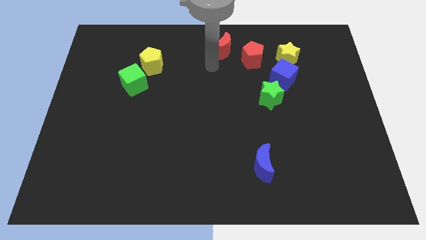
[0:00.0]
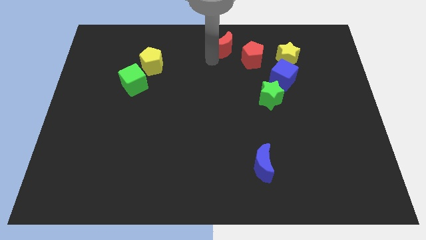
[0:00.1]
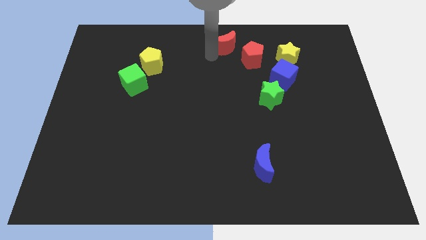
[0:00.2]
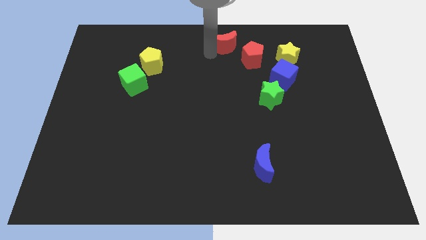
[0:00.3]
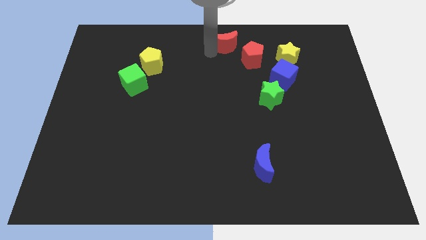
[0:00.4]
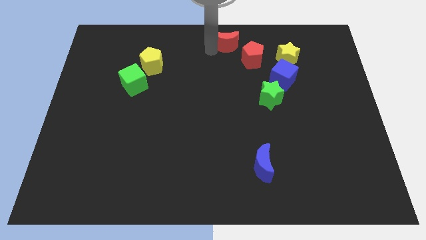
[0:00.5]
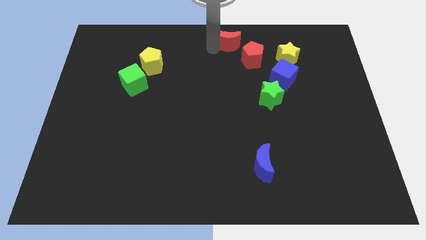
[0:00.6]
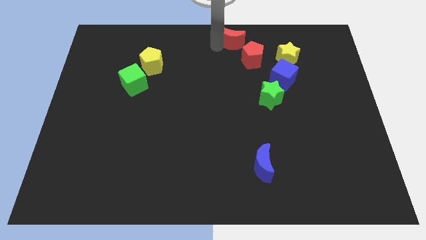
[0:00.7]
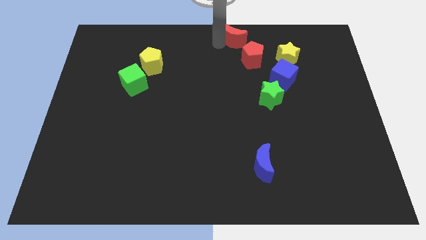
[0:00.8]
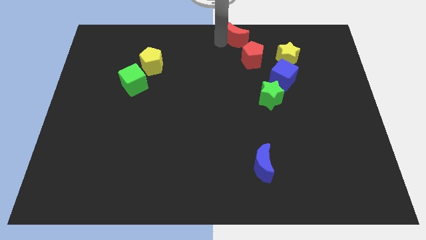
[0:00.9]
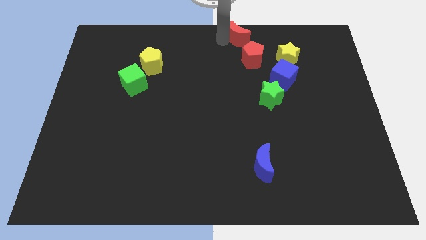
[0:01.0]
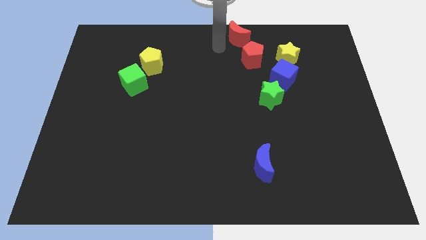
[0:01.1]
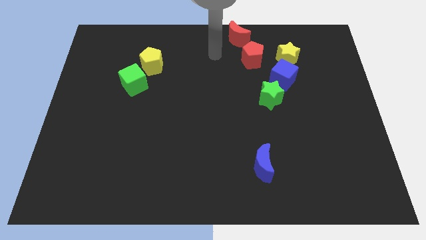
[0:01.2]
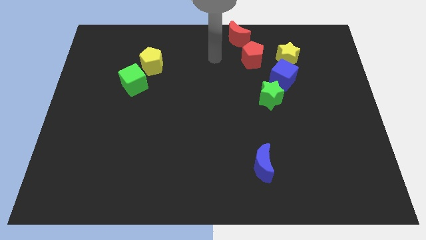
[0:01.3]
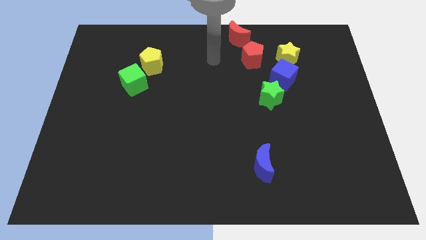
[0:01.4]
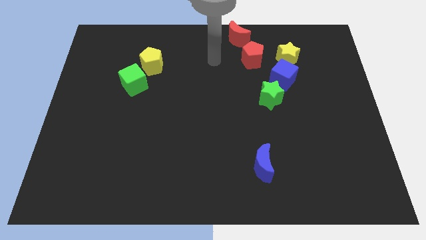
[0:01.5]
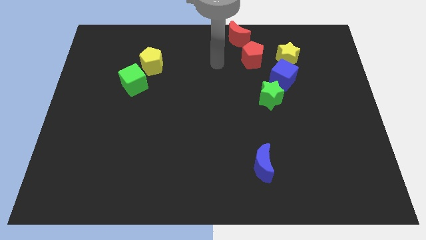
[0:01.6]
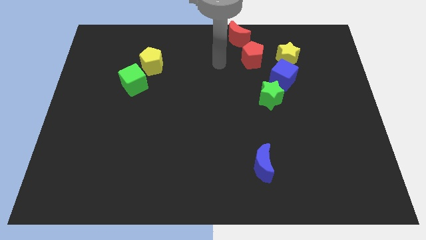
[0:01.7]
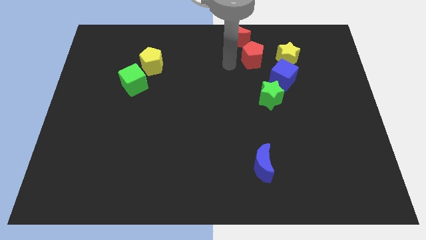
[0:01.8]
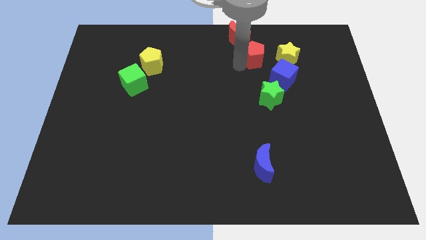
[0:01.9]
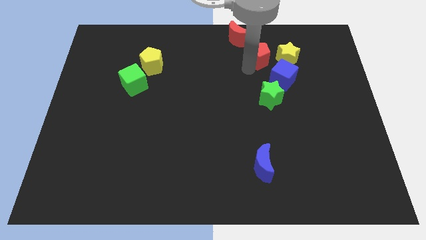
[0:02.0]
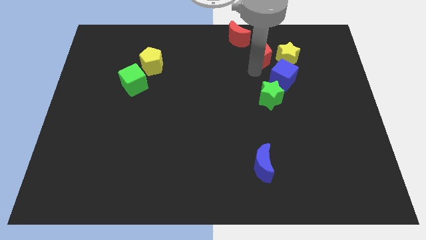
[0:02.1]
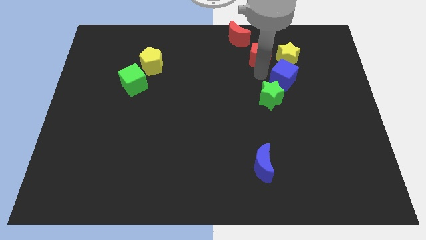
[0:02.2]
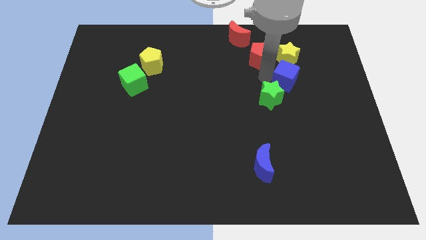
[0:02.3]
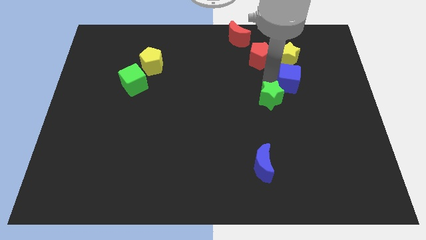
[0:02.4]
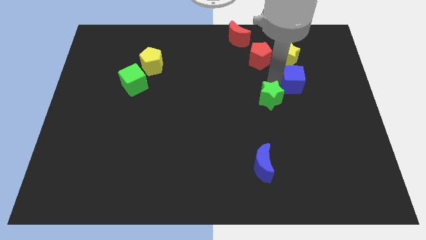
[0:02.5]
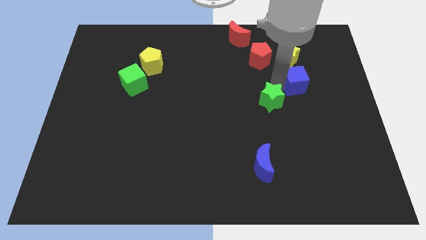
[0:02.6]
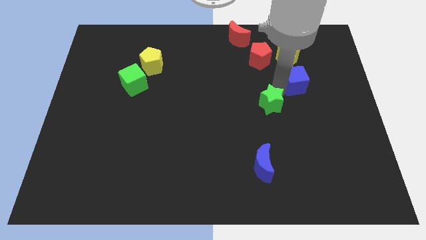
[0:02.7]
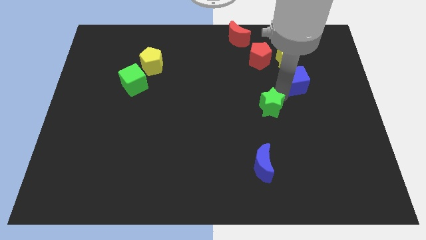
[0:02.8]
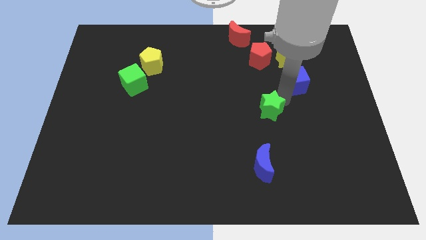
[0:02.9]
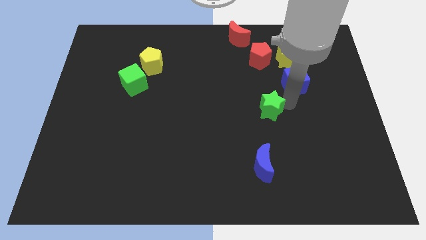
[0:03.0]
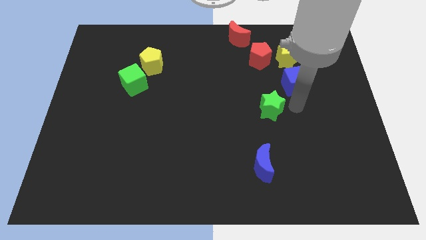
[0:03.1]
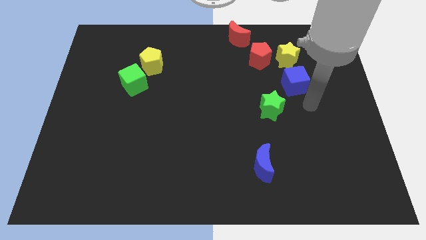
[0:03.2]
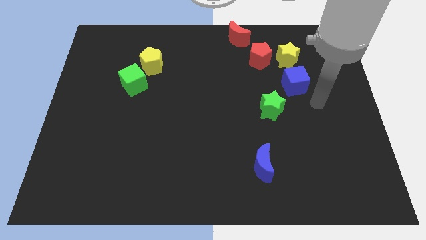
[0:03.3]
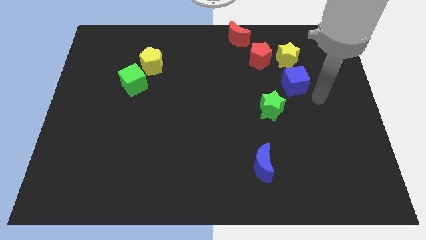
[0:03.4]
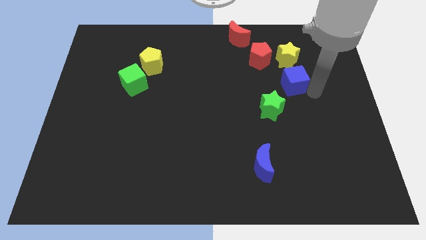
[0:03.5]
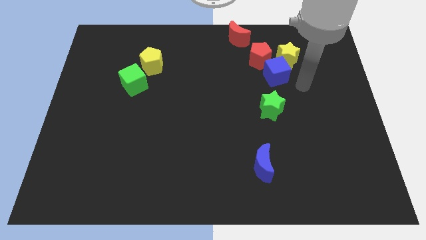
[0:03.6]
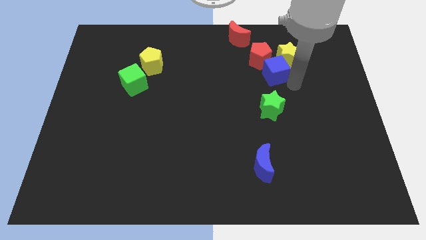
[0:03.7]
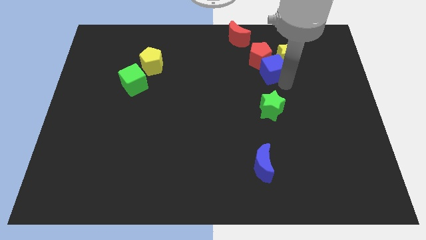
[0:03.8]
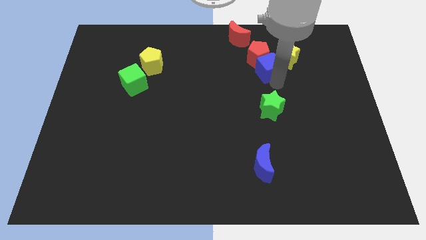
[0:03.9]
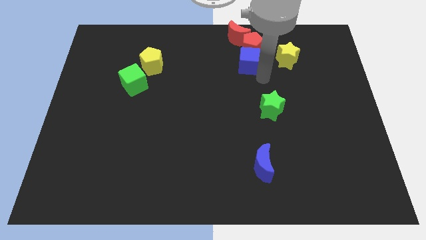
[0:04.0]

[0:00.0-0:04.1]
push the blue cube into the red pentagon

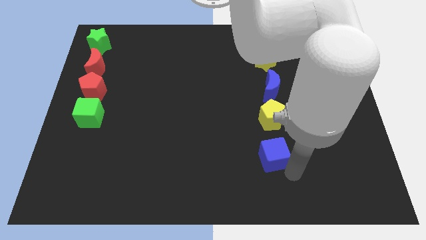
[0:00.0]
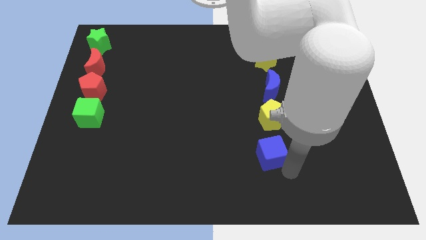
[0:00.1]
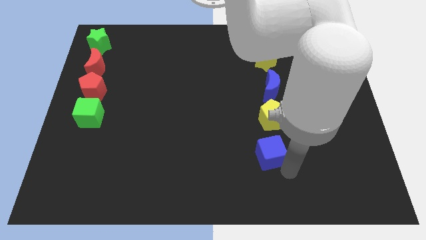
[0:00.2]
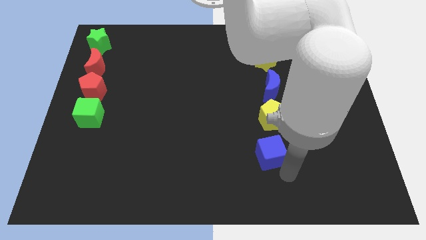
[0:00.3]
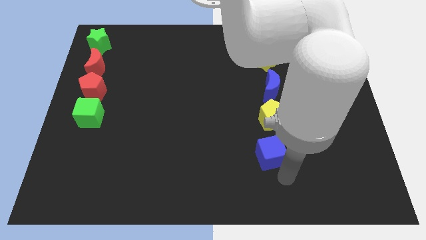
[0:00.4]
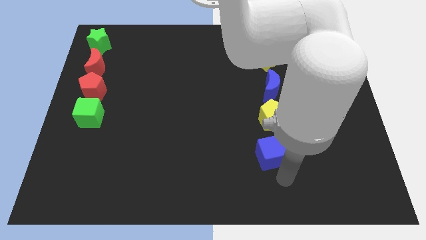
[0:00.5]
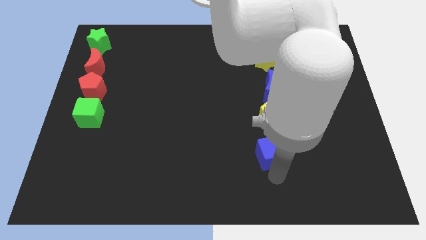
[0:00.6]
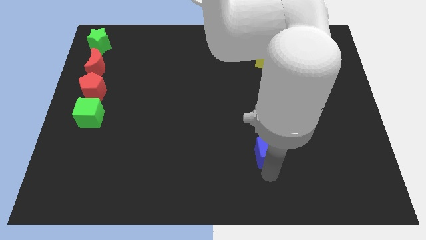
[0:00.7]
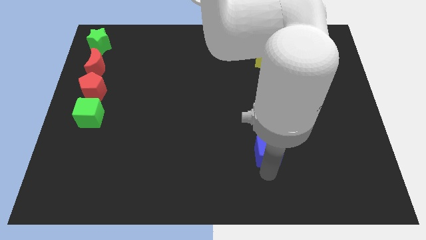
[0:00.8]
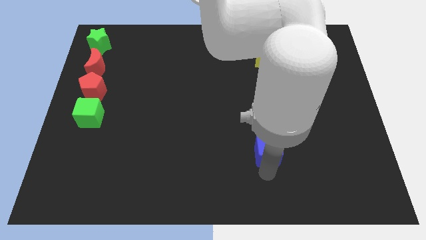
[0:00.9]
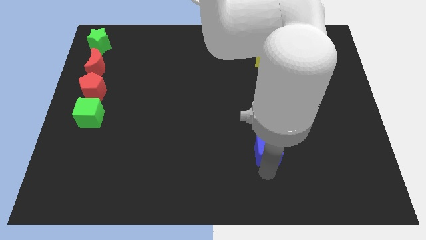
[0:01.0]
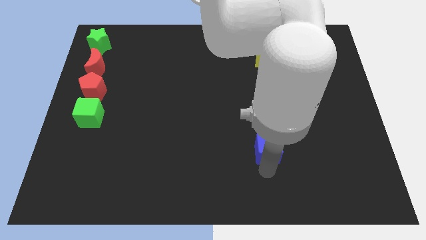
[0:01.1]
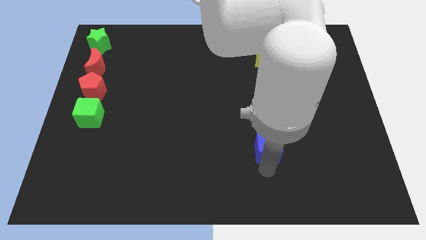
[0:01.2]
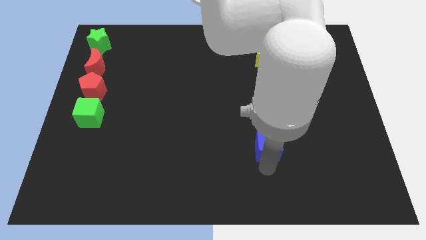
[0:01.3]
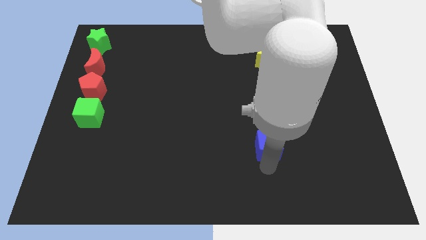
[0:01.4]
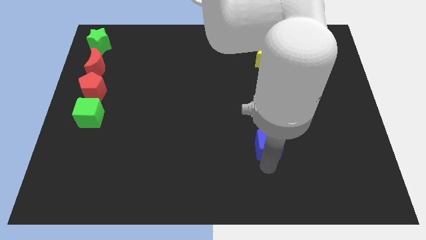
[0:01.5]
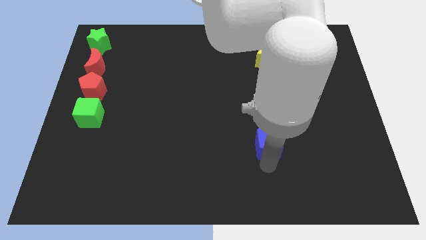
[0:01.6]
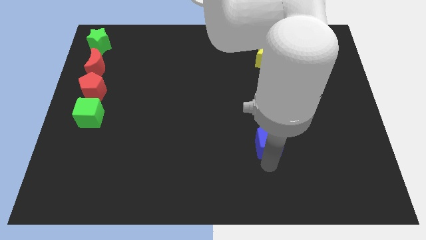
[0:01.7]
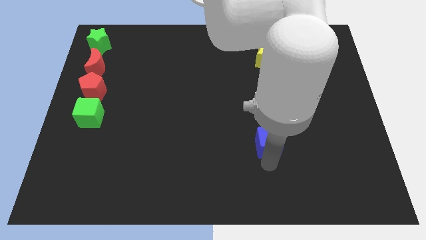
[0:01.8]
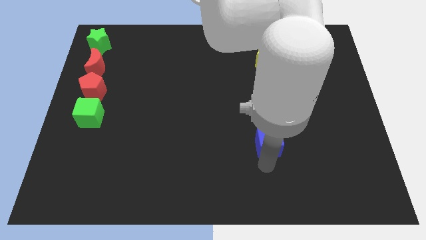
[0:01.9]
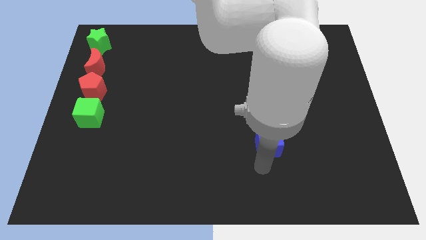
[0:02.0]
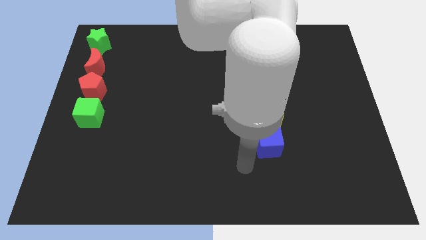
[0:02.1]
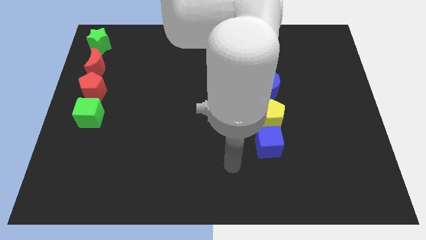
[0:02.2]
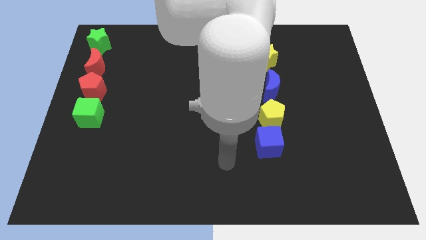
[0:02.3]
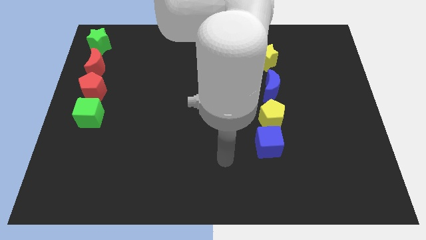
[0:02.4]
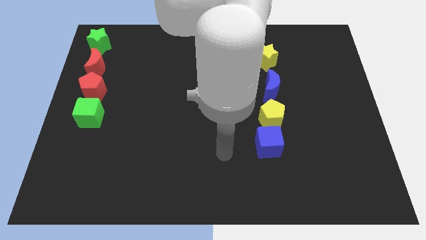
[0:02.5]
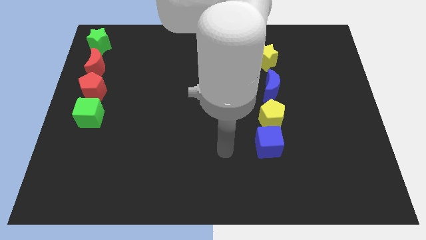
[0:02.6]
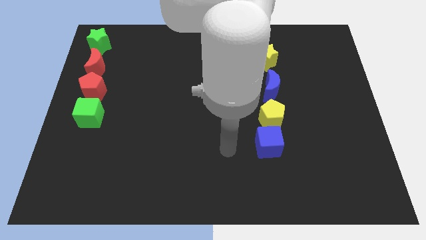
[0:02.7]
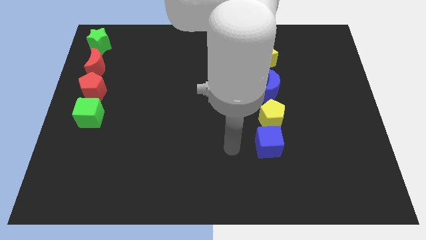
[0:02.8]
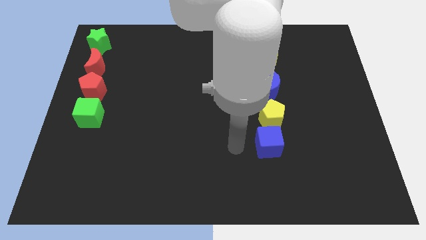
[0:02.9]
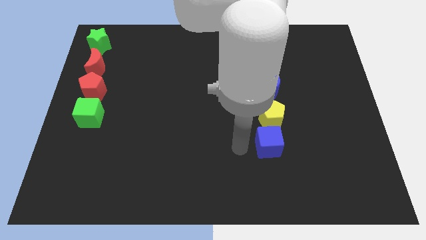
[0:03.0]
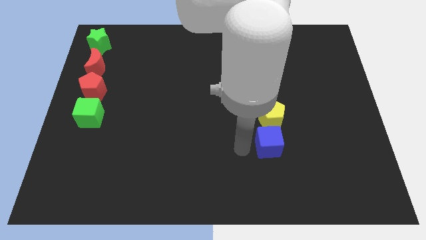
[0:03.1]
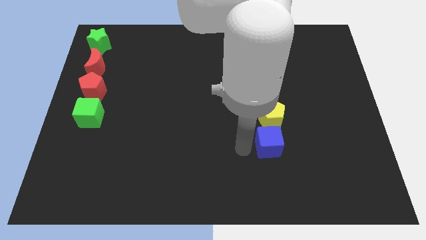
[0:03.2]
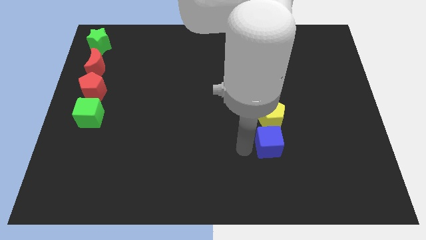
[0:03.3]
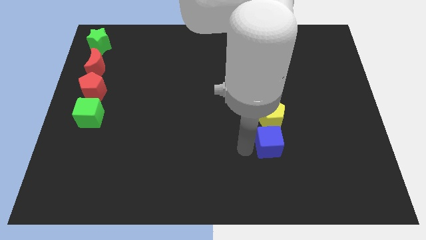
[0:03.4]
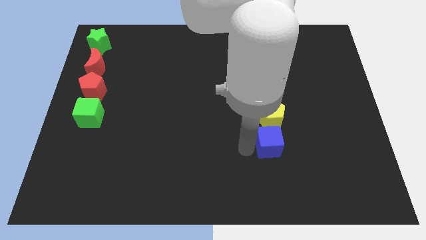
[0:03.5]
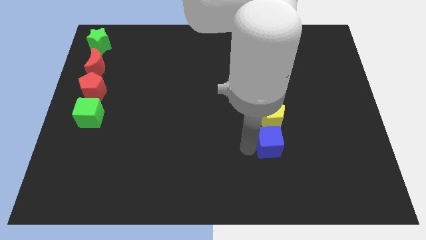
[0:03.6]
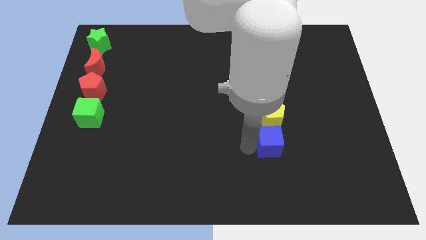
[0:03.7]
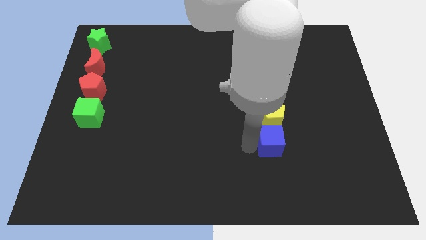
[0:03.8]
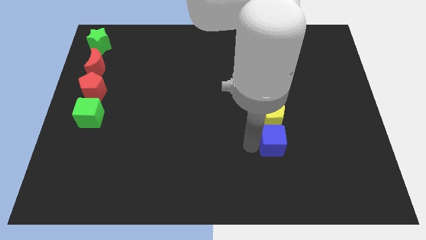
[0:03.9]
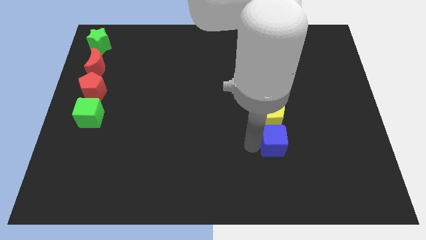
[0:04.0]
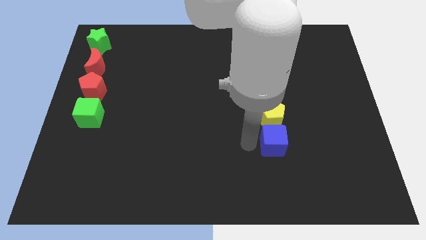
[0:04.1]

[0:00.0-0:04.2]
push blue cube slightly above

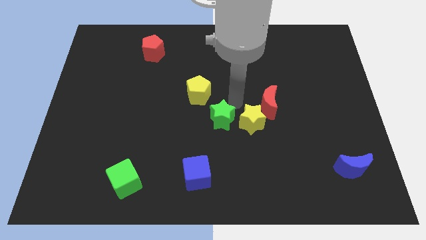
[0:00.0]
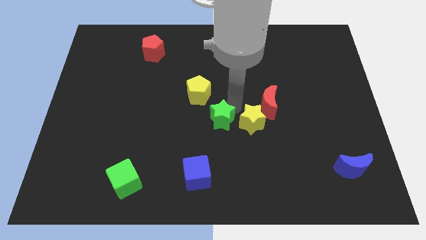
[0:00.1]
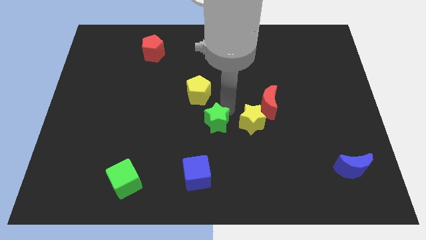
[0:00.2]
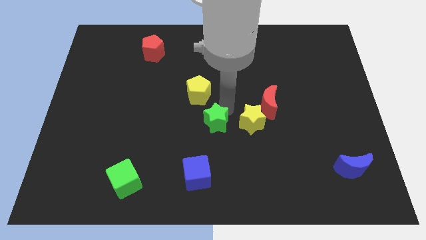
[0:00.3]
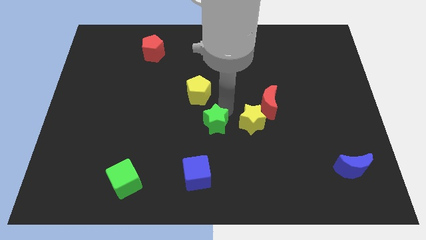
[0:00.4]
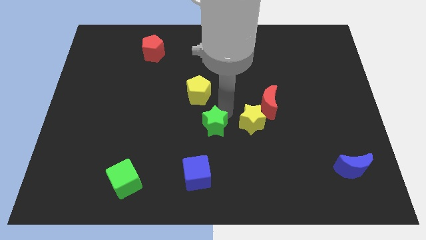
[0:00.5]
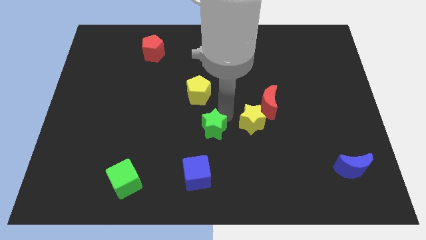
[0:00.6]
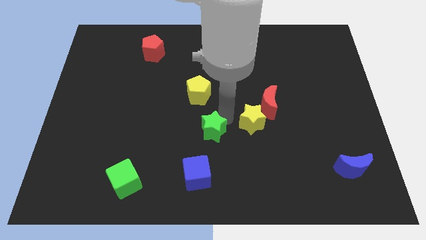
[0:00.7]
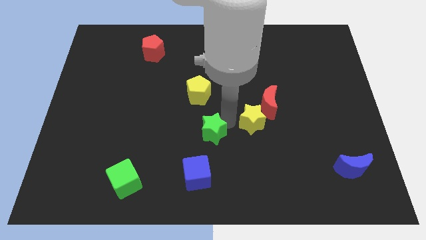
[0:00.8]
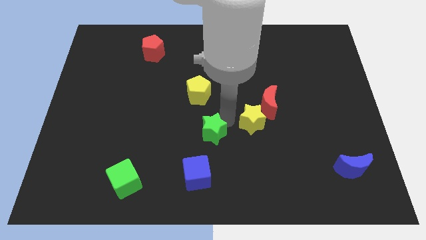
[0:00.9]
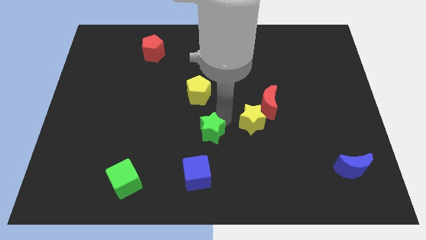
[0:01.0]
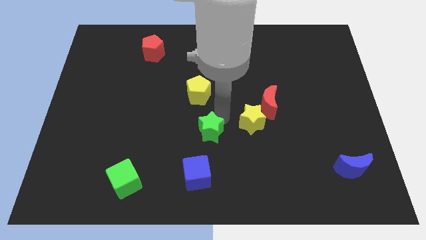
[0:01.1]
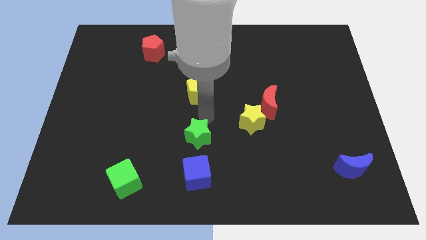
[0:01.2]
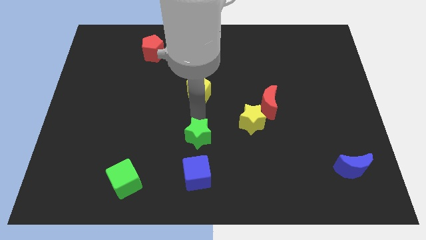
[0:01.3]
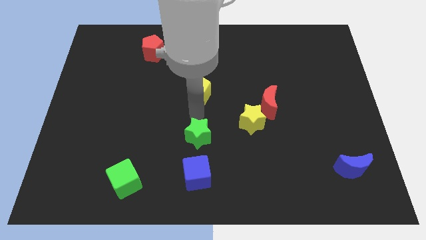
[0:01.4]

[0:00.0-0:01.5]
place the green cube vertically above the blue cube
